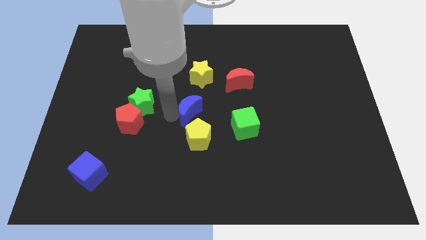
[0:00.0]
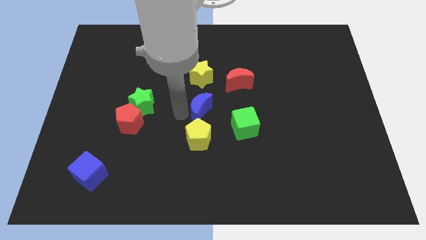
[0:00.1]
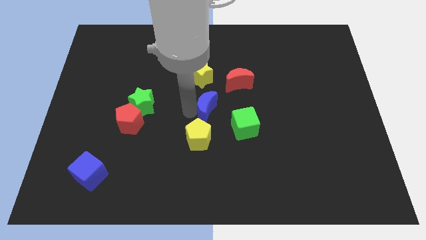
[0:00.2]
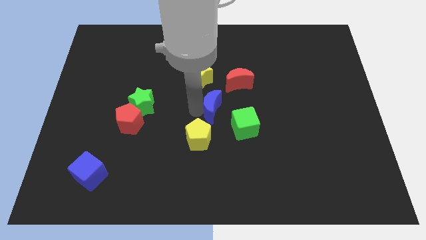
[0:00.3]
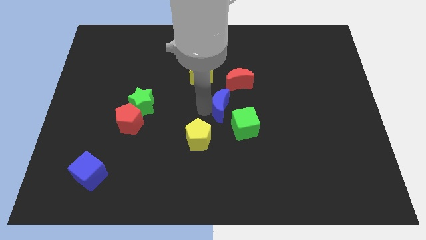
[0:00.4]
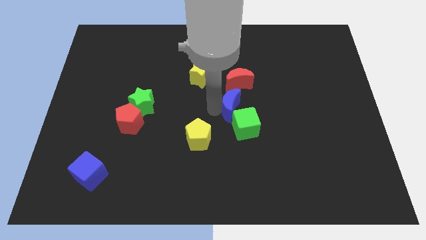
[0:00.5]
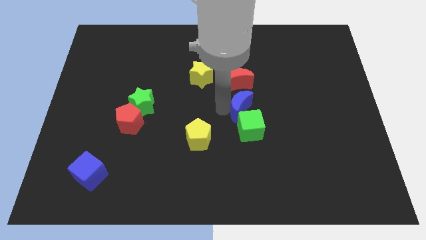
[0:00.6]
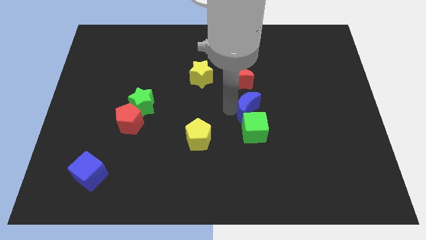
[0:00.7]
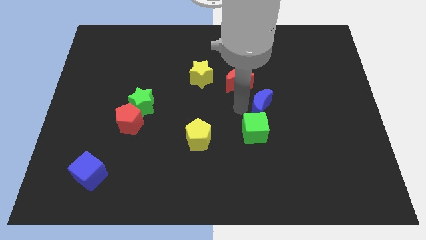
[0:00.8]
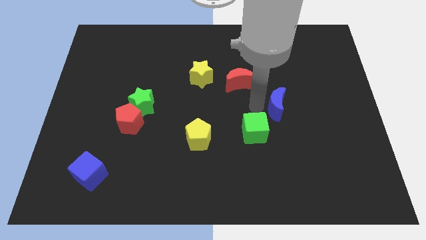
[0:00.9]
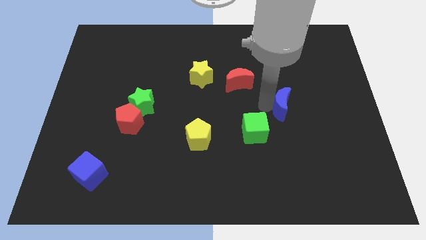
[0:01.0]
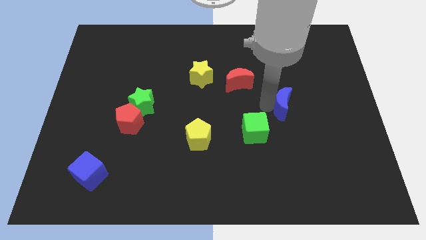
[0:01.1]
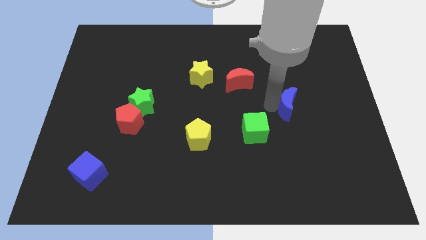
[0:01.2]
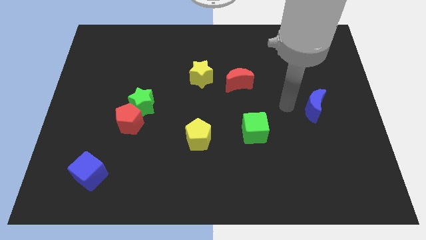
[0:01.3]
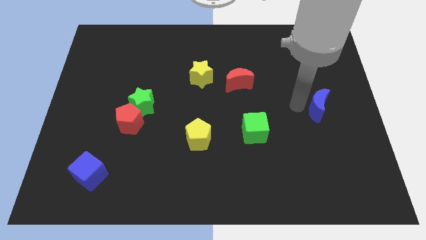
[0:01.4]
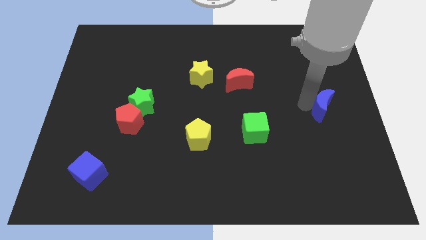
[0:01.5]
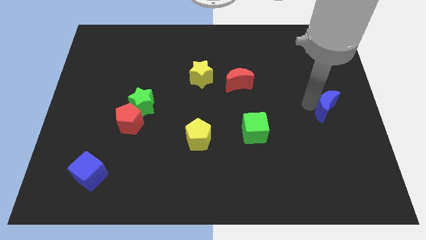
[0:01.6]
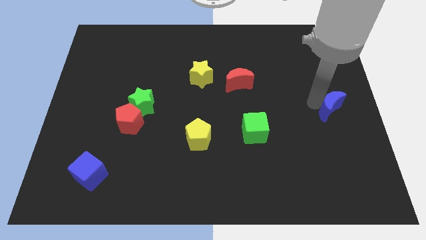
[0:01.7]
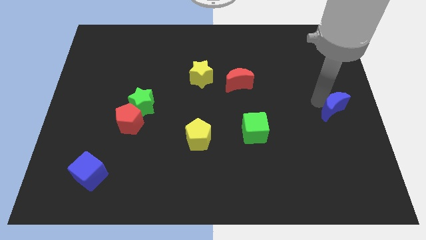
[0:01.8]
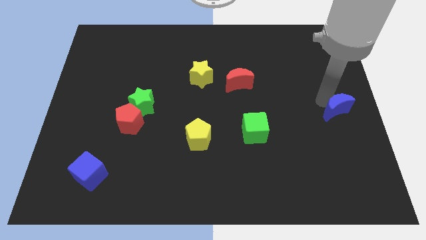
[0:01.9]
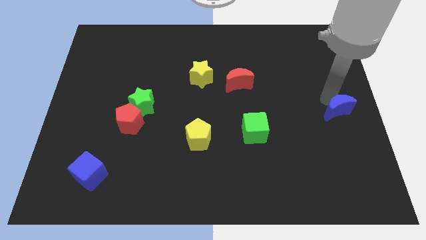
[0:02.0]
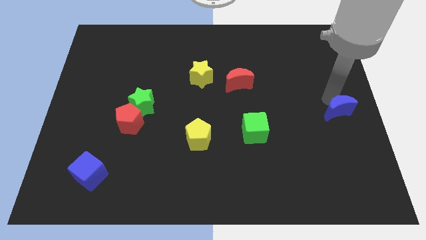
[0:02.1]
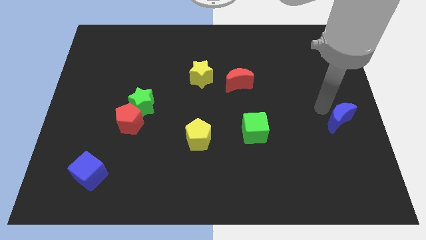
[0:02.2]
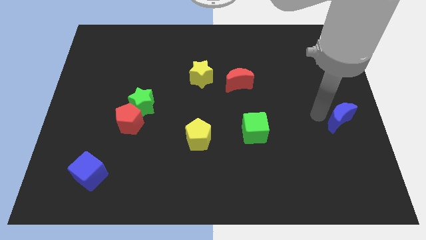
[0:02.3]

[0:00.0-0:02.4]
push the blue crescent to the right

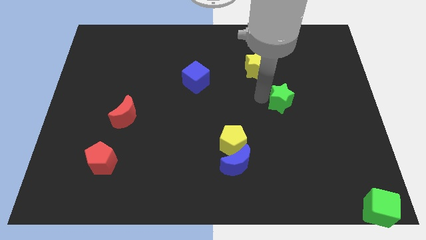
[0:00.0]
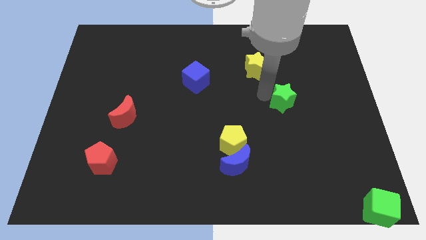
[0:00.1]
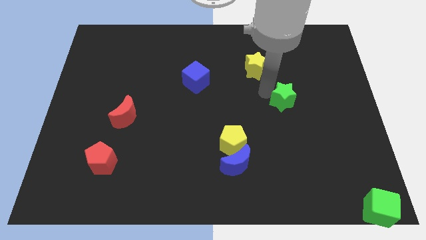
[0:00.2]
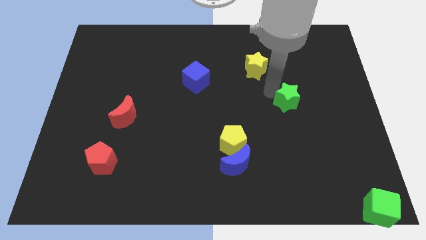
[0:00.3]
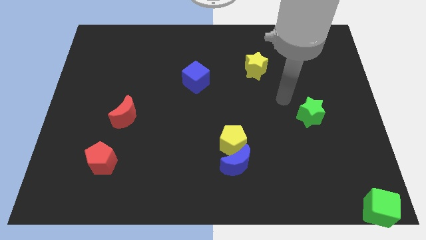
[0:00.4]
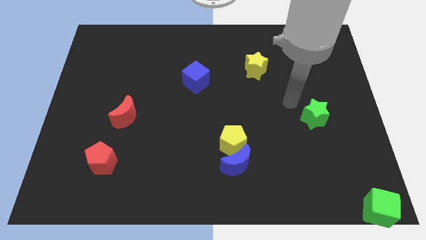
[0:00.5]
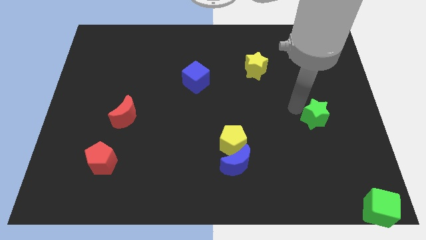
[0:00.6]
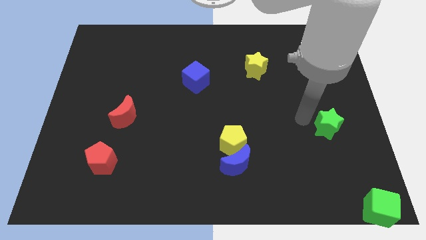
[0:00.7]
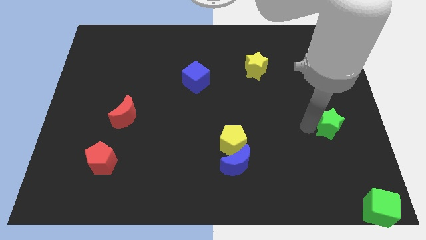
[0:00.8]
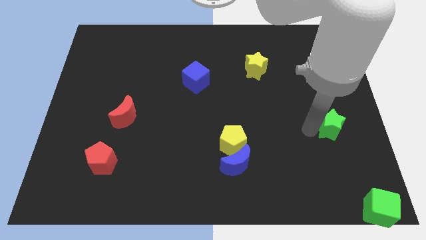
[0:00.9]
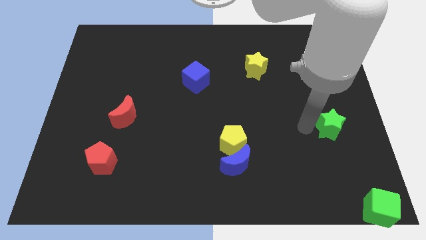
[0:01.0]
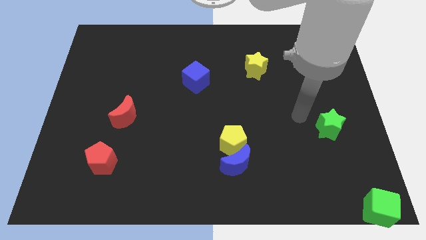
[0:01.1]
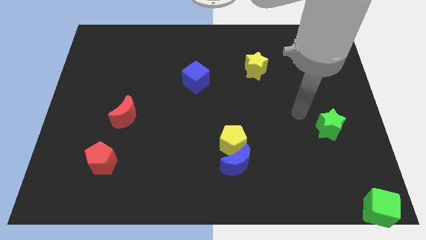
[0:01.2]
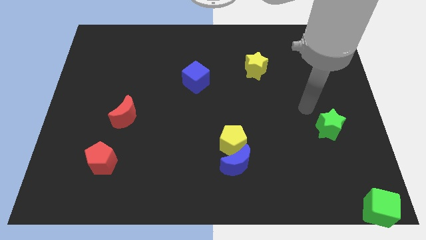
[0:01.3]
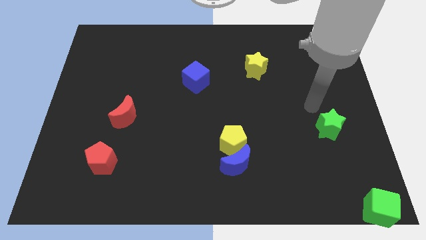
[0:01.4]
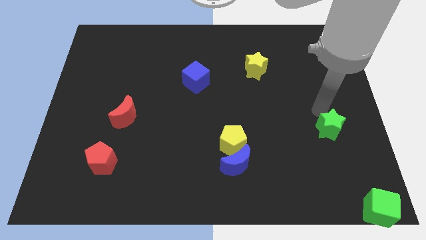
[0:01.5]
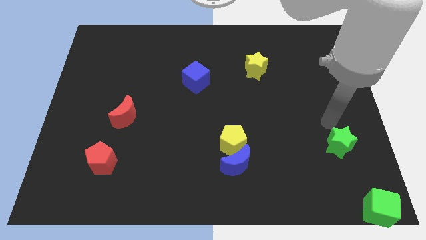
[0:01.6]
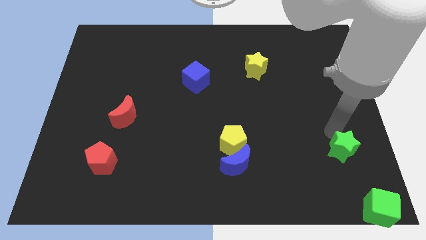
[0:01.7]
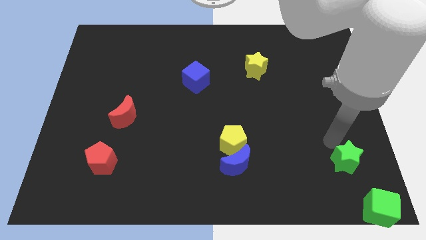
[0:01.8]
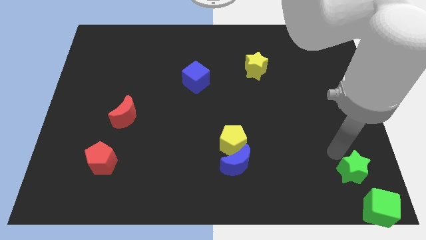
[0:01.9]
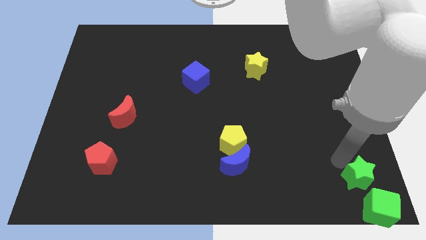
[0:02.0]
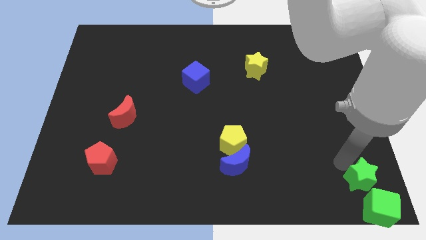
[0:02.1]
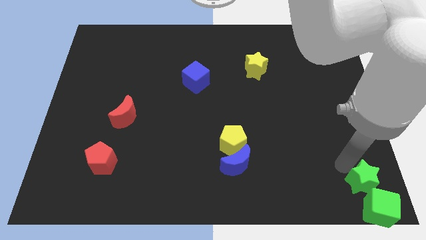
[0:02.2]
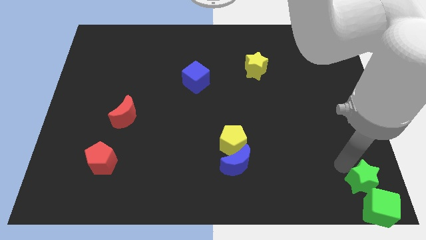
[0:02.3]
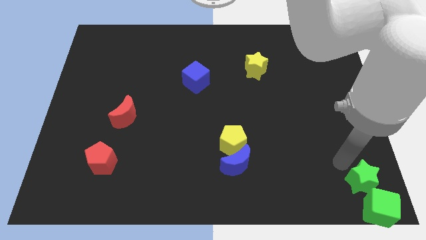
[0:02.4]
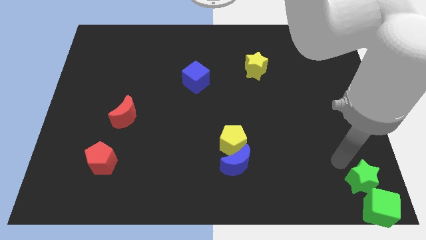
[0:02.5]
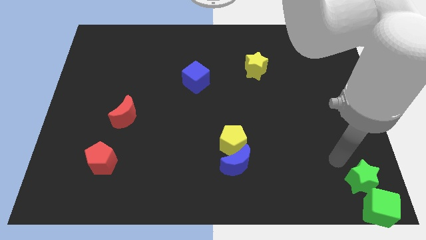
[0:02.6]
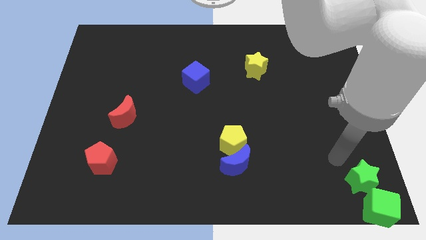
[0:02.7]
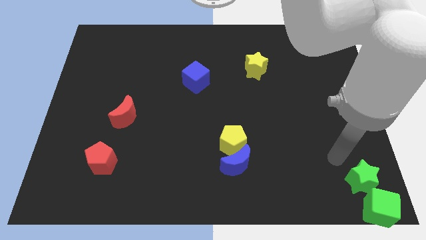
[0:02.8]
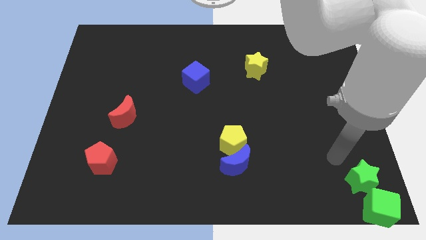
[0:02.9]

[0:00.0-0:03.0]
place the green star above the green cube at the bottom

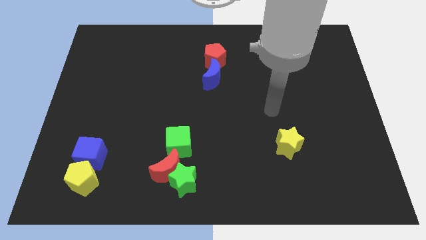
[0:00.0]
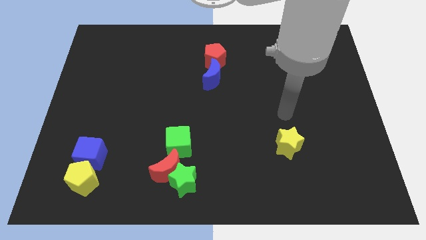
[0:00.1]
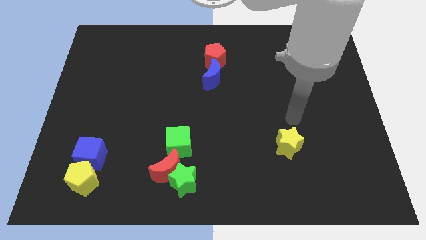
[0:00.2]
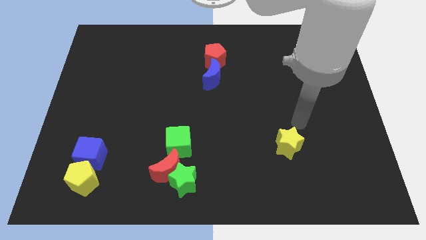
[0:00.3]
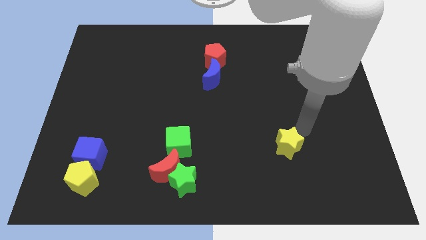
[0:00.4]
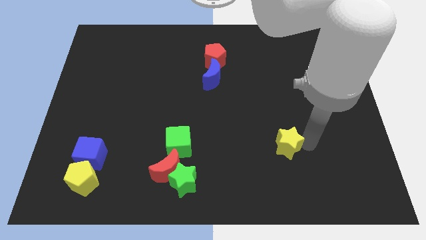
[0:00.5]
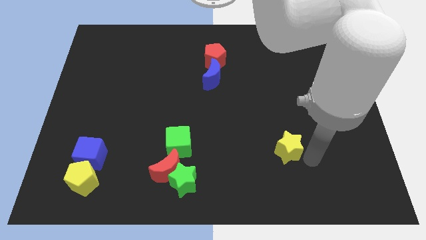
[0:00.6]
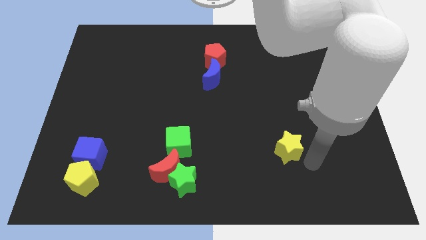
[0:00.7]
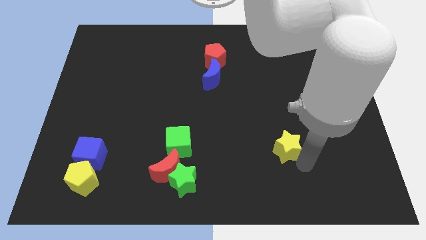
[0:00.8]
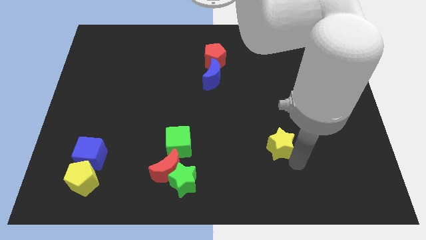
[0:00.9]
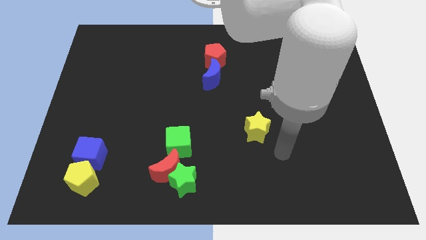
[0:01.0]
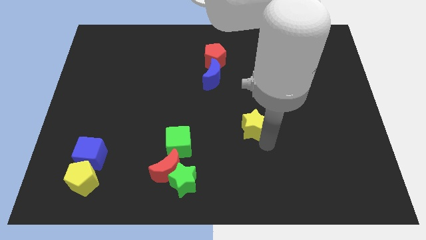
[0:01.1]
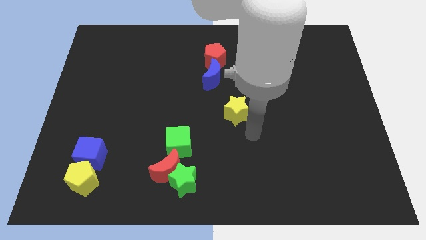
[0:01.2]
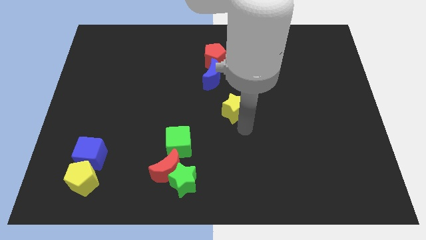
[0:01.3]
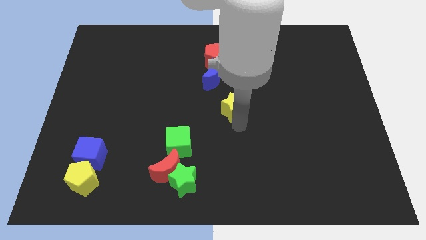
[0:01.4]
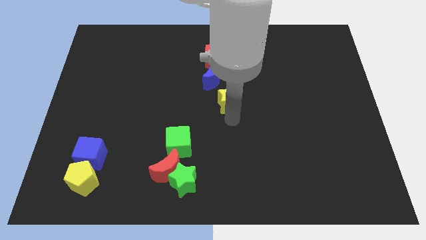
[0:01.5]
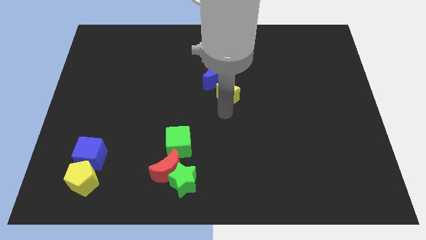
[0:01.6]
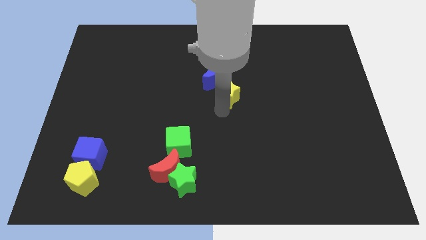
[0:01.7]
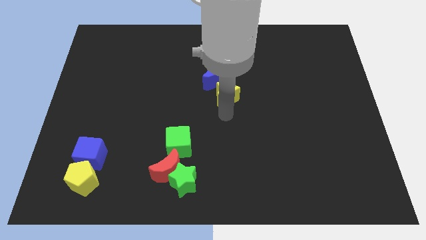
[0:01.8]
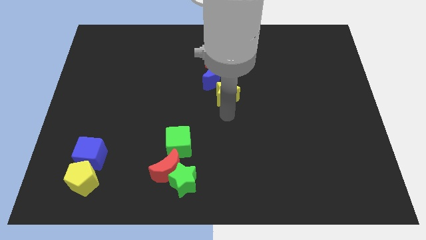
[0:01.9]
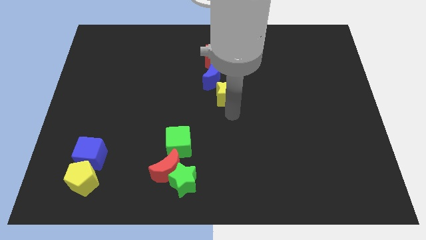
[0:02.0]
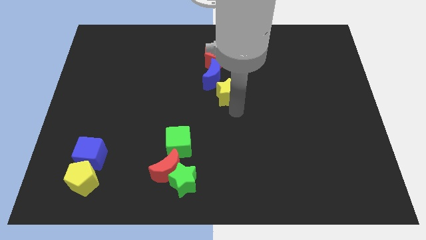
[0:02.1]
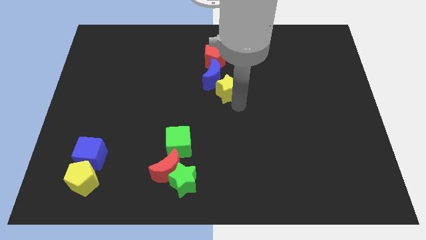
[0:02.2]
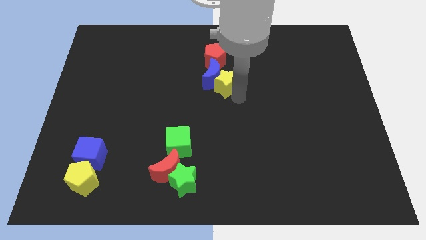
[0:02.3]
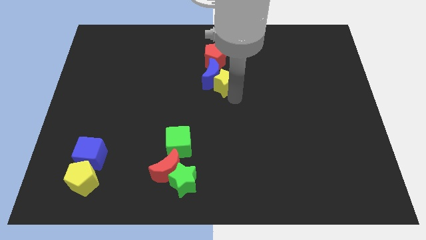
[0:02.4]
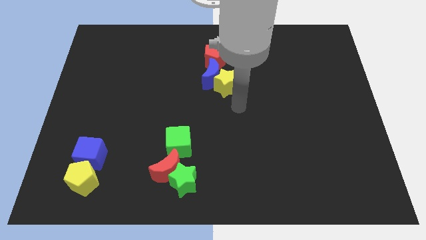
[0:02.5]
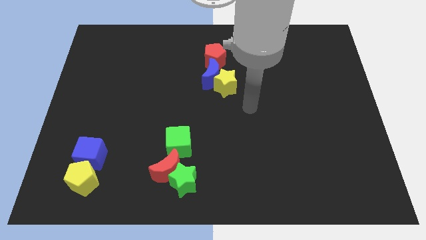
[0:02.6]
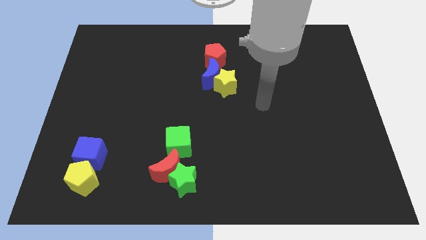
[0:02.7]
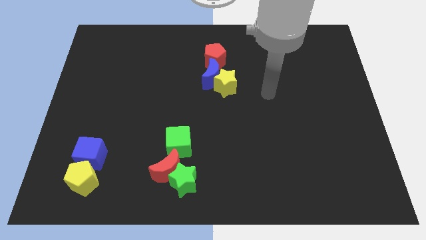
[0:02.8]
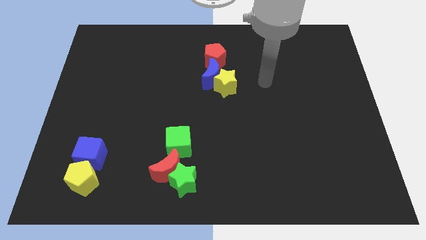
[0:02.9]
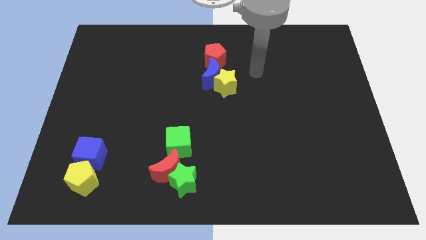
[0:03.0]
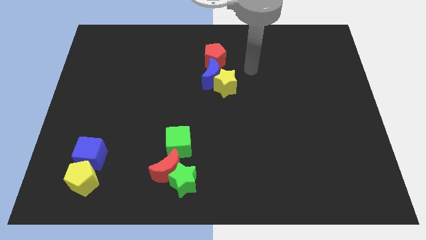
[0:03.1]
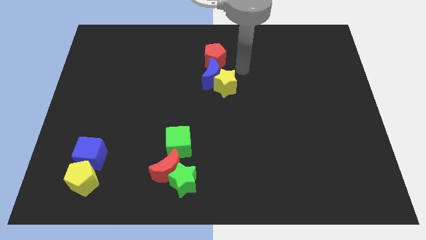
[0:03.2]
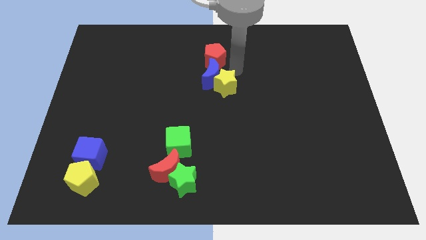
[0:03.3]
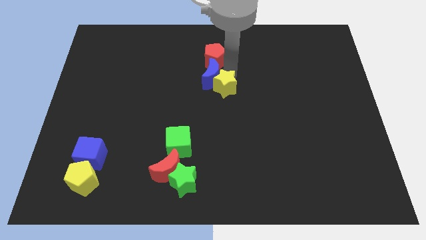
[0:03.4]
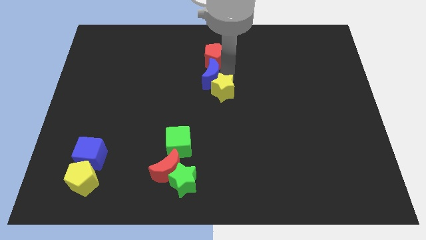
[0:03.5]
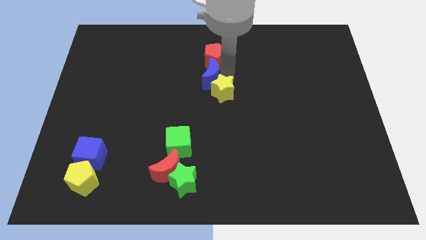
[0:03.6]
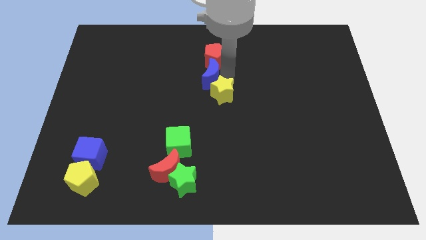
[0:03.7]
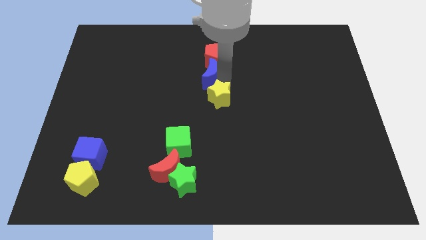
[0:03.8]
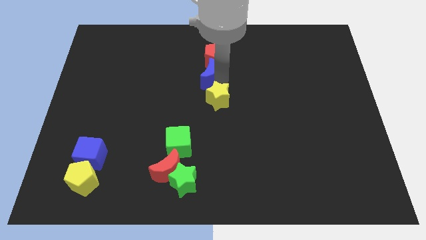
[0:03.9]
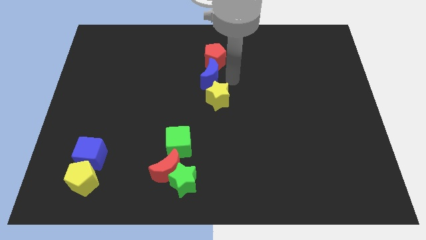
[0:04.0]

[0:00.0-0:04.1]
place yellow star to the bottom of blue moon
